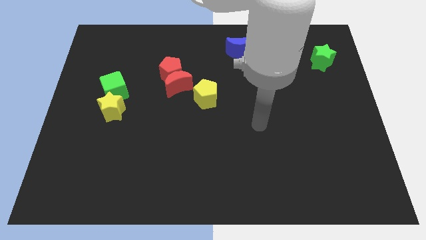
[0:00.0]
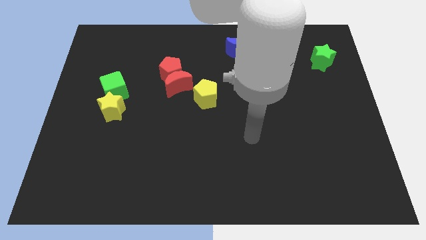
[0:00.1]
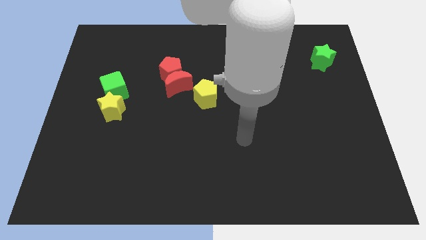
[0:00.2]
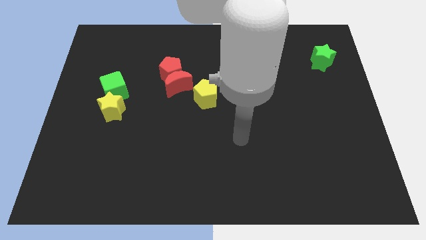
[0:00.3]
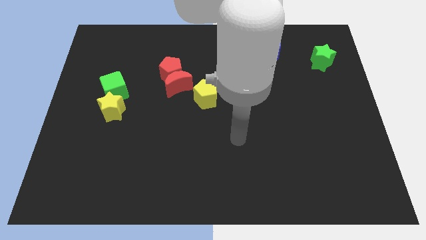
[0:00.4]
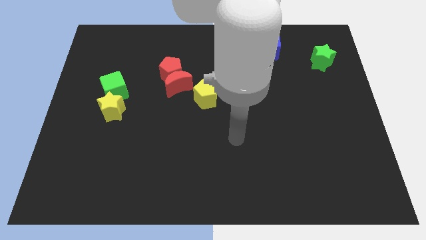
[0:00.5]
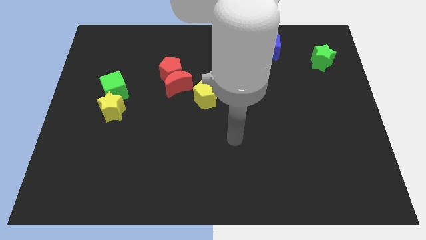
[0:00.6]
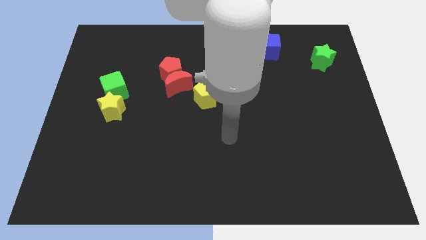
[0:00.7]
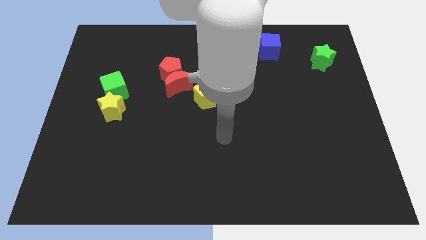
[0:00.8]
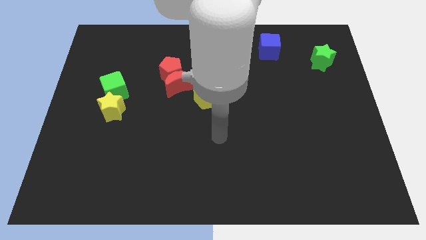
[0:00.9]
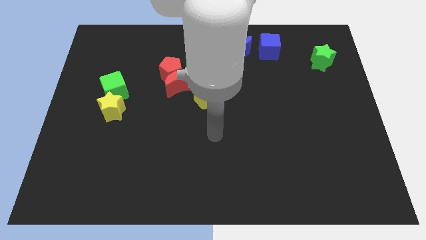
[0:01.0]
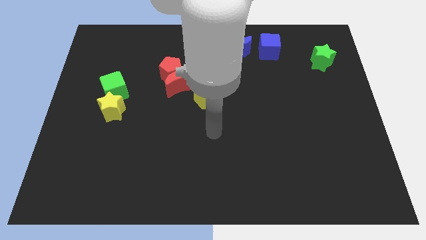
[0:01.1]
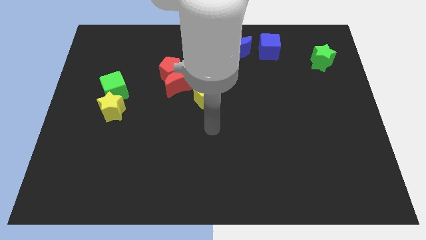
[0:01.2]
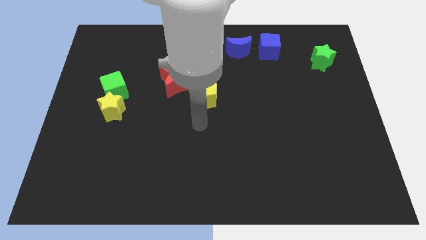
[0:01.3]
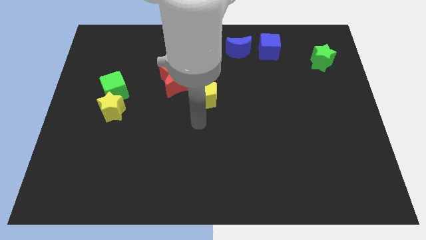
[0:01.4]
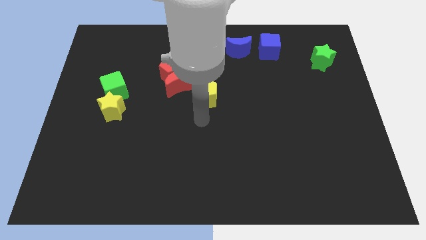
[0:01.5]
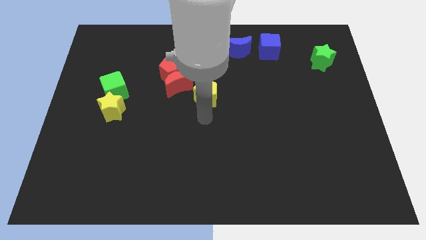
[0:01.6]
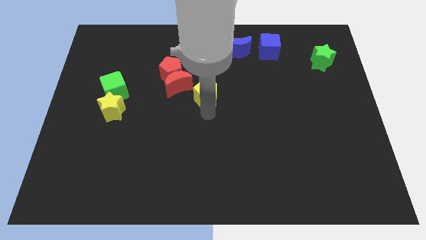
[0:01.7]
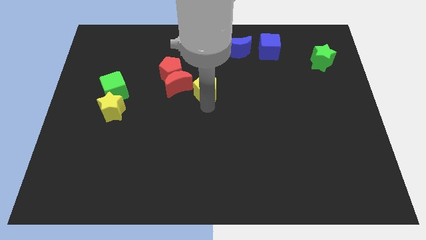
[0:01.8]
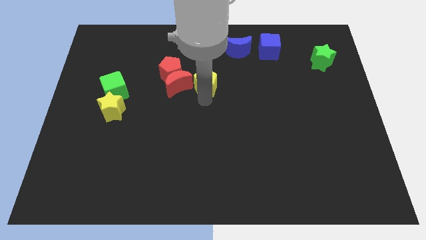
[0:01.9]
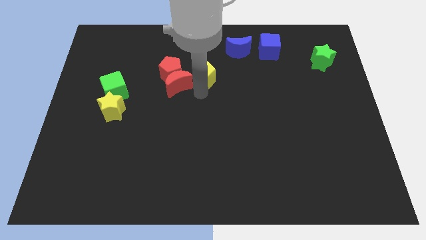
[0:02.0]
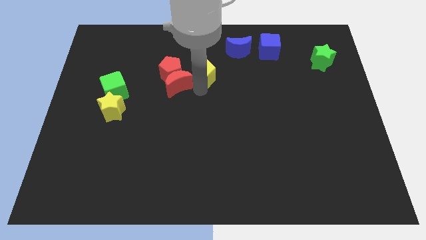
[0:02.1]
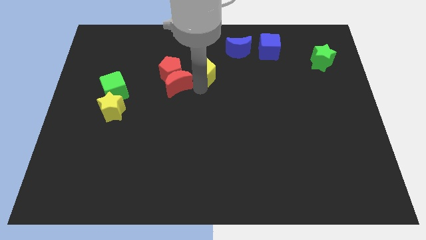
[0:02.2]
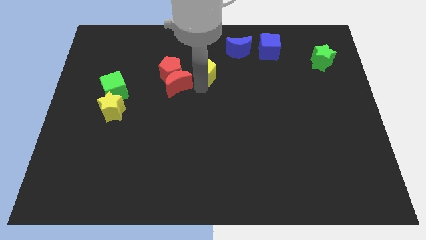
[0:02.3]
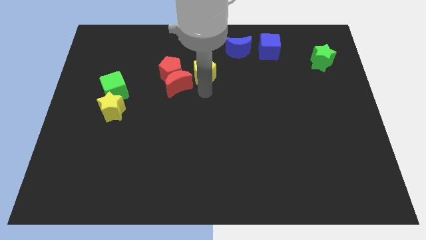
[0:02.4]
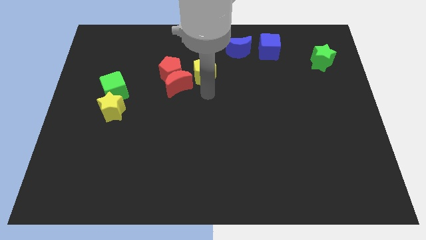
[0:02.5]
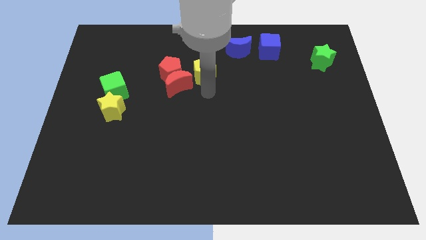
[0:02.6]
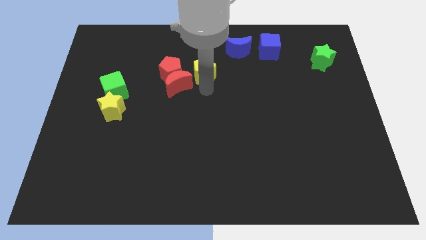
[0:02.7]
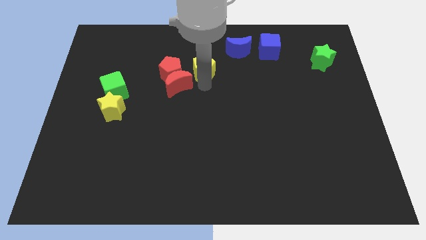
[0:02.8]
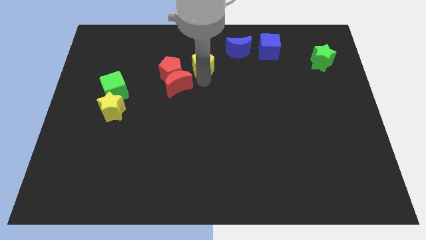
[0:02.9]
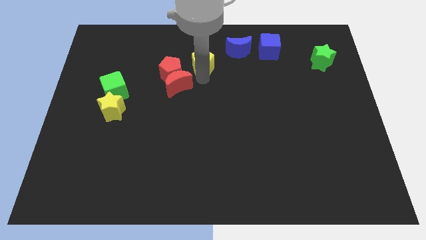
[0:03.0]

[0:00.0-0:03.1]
place the yellow pentagon right to the red pentagon

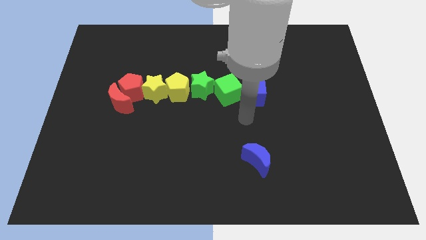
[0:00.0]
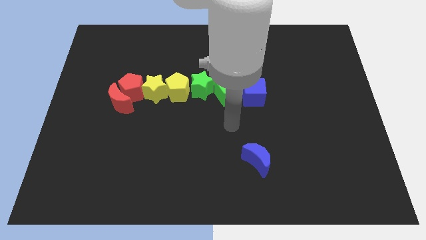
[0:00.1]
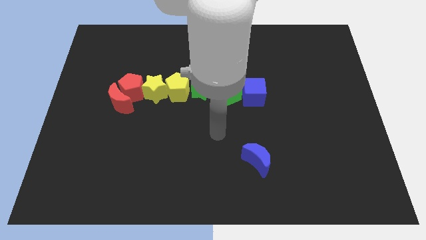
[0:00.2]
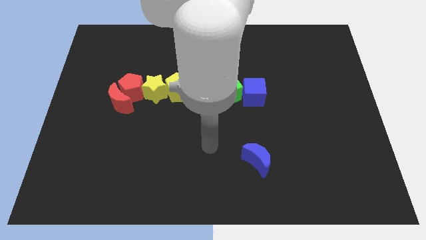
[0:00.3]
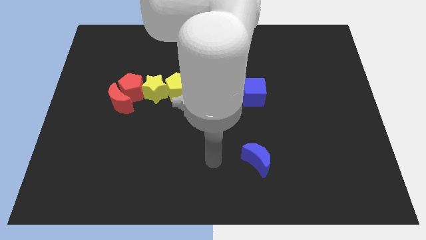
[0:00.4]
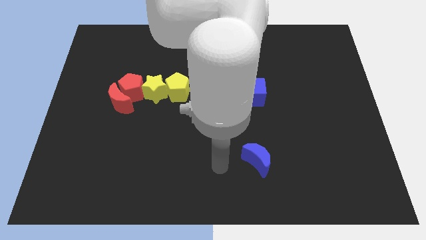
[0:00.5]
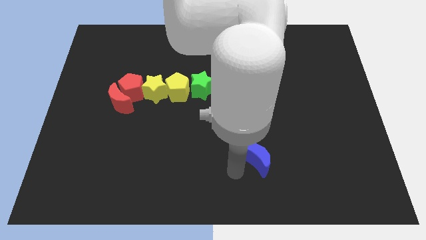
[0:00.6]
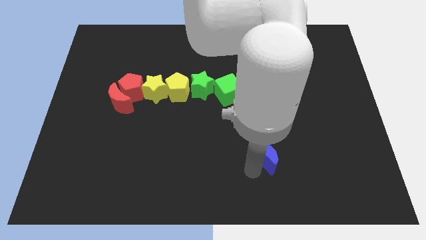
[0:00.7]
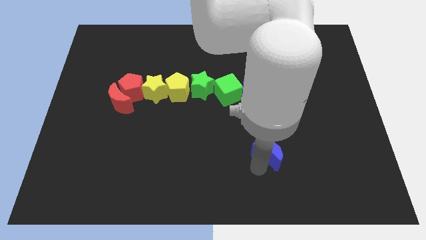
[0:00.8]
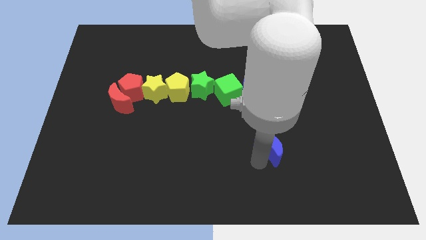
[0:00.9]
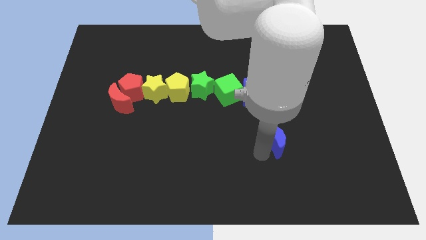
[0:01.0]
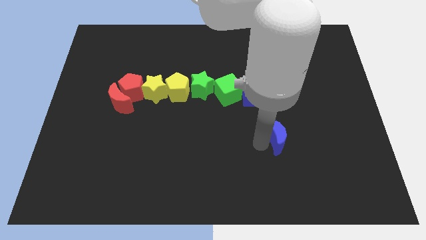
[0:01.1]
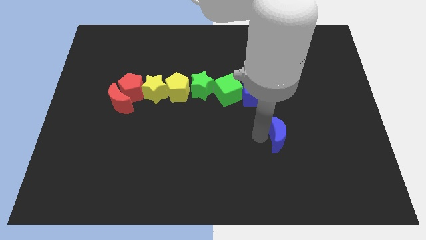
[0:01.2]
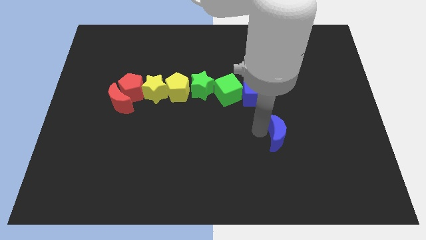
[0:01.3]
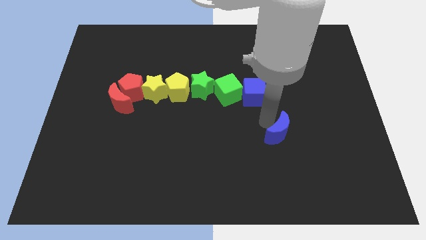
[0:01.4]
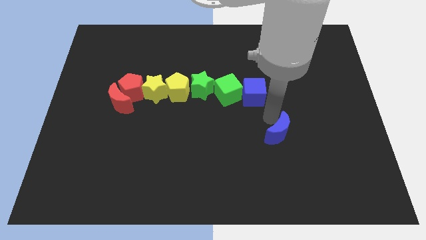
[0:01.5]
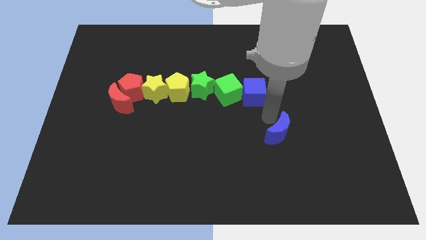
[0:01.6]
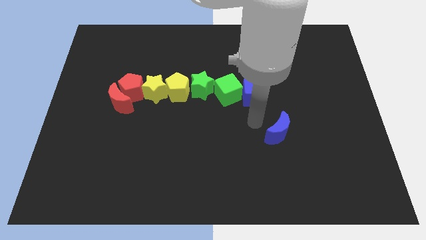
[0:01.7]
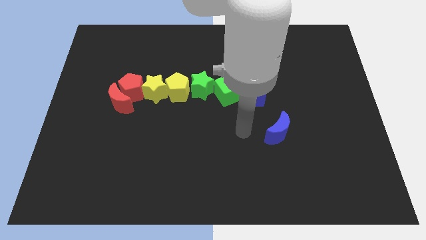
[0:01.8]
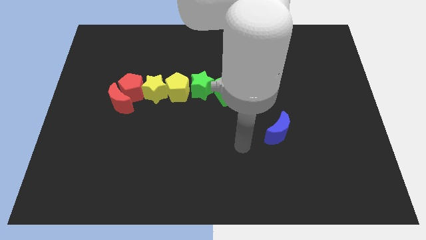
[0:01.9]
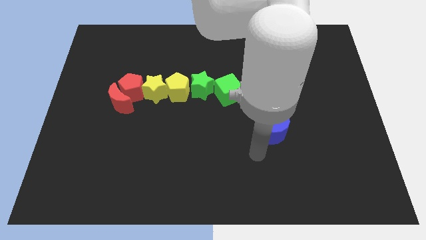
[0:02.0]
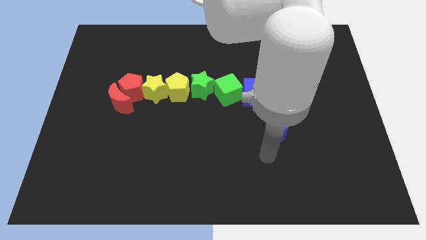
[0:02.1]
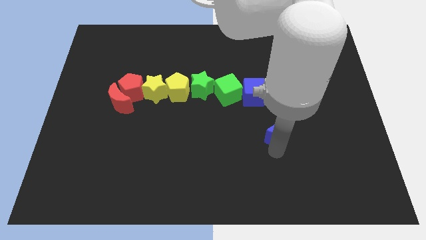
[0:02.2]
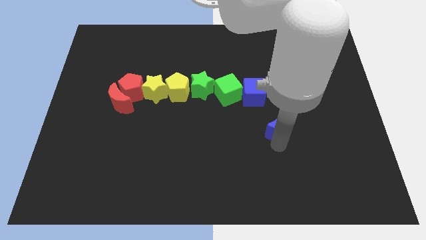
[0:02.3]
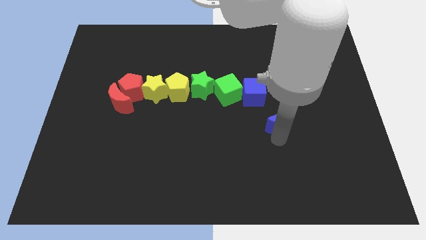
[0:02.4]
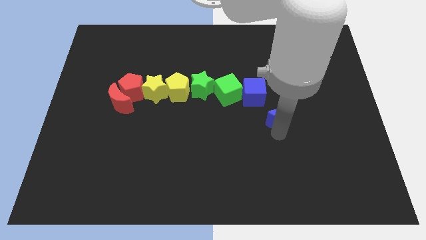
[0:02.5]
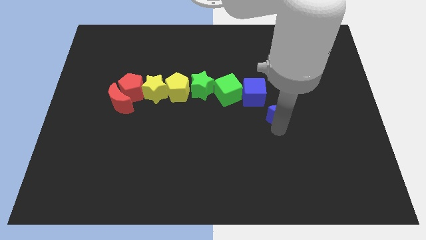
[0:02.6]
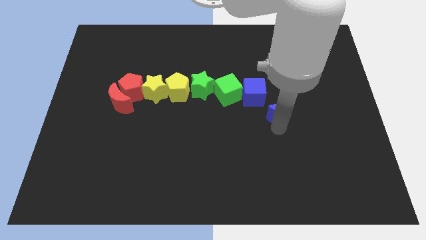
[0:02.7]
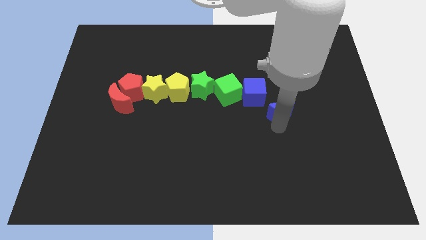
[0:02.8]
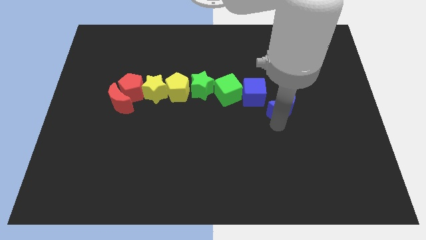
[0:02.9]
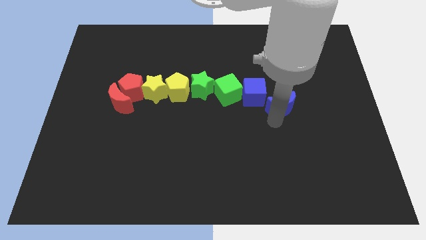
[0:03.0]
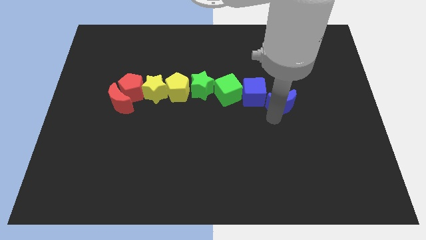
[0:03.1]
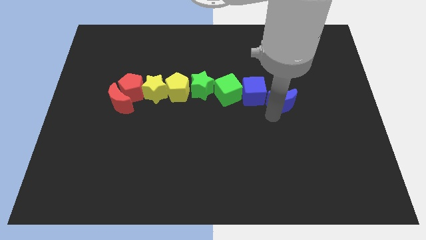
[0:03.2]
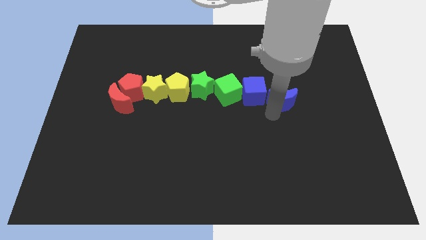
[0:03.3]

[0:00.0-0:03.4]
slide the blue moon into the right side of the blue cube

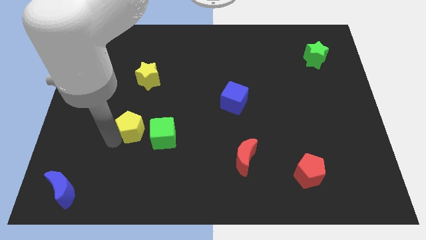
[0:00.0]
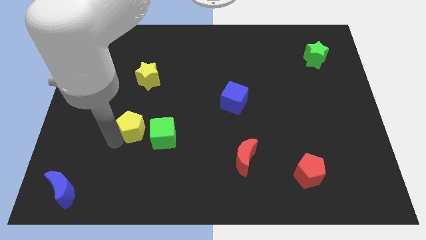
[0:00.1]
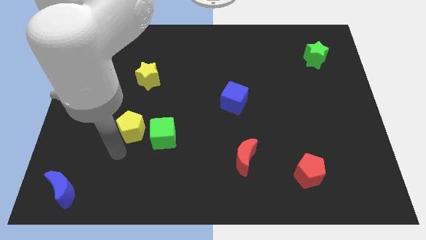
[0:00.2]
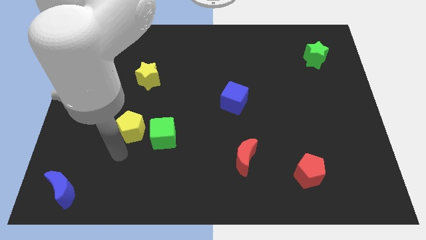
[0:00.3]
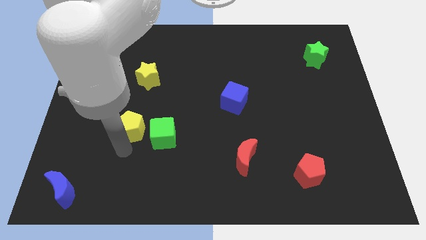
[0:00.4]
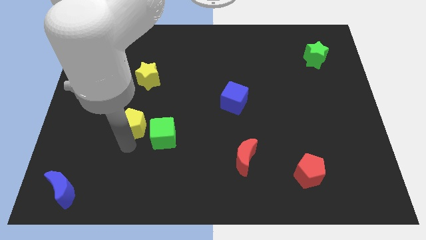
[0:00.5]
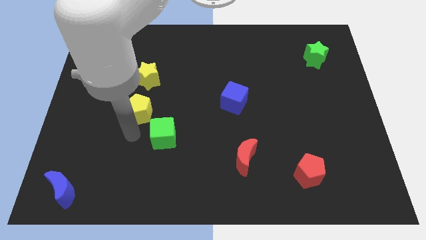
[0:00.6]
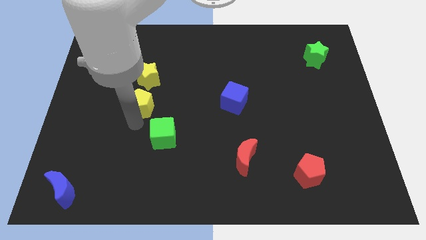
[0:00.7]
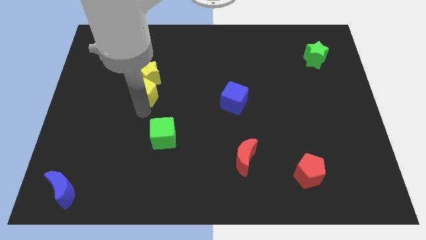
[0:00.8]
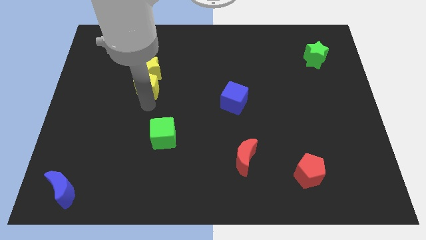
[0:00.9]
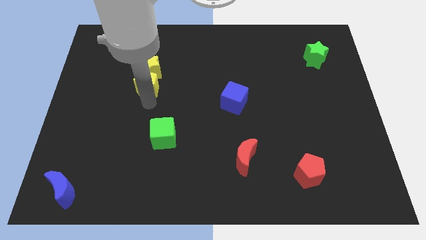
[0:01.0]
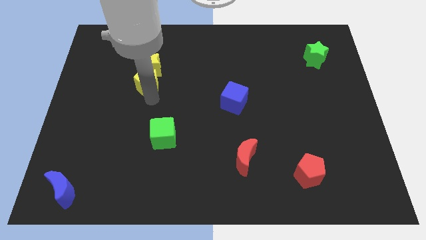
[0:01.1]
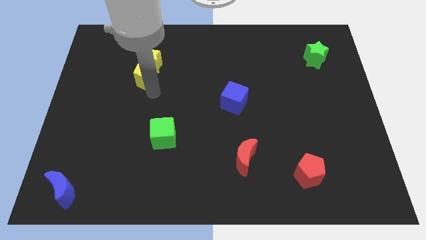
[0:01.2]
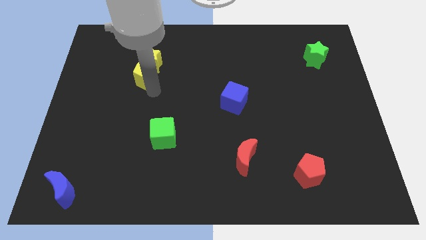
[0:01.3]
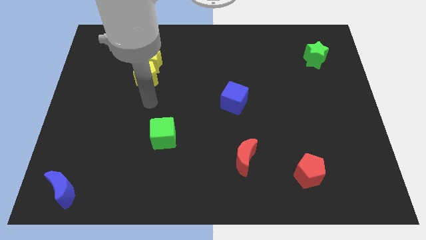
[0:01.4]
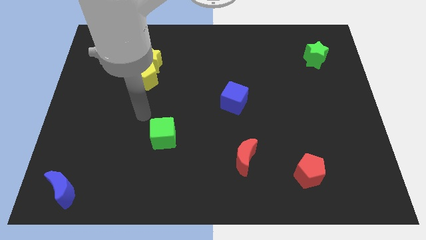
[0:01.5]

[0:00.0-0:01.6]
push yellow pentagon into the yellow star

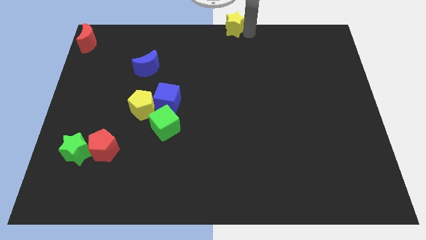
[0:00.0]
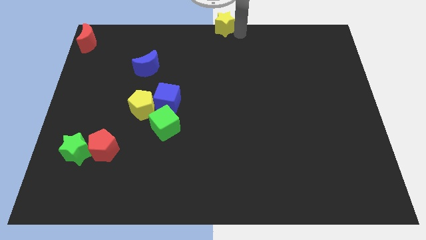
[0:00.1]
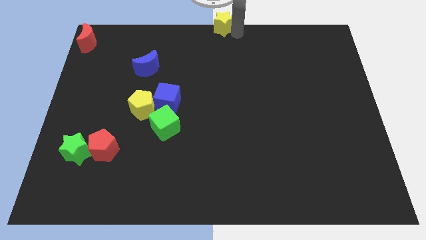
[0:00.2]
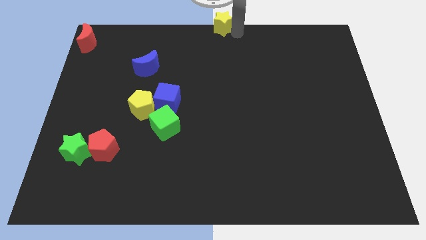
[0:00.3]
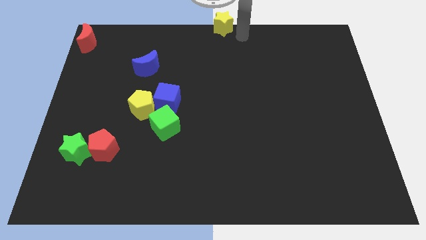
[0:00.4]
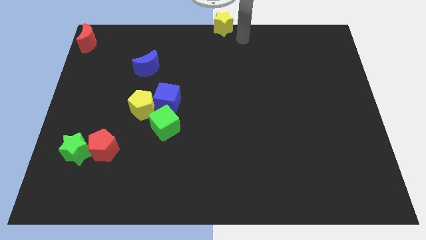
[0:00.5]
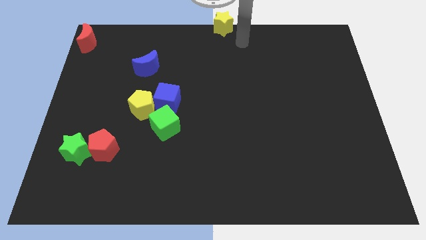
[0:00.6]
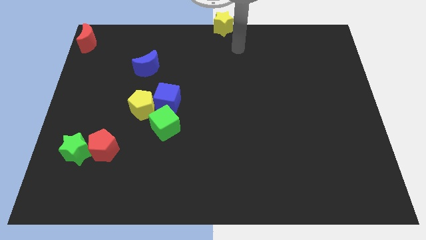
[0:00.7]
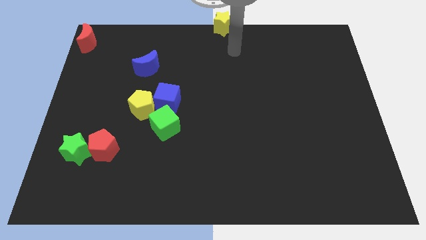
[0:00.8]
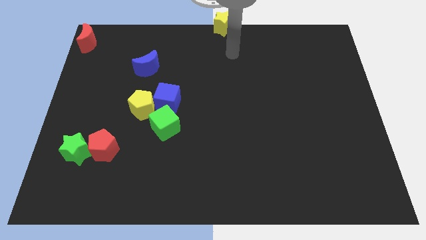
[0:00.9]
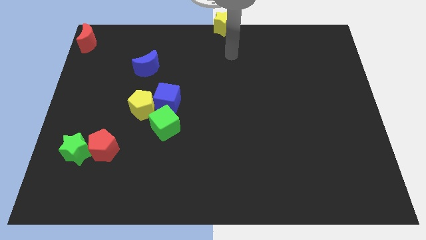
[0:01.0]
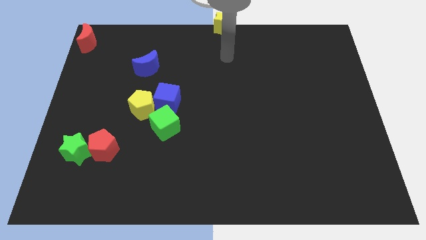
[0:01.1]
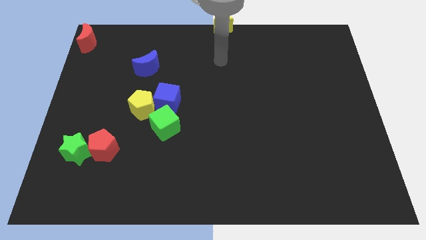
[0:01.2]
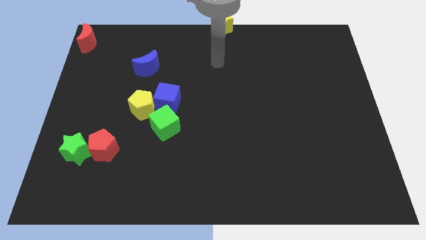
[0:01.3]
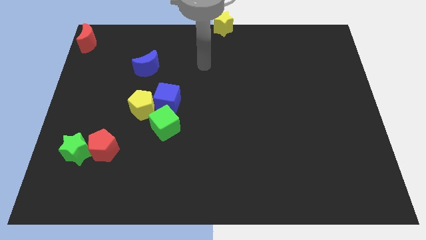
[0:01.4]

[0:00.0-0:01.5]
place a yellow star on the top center of the board
